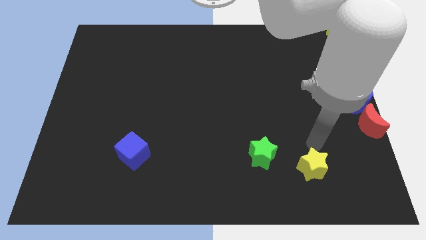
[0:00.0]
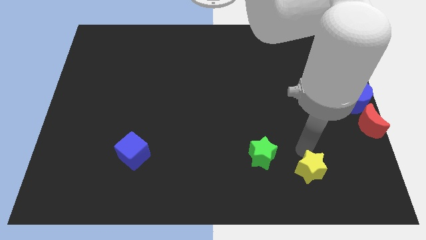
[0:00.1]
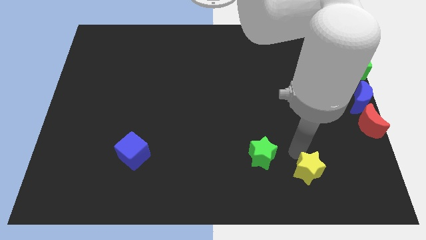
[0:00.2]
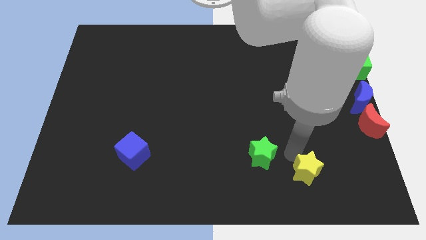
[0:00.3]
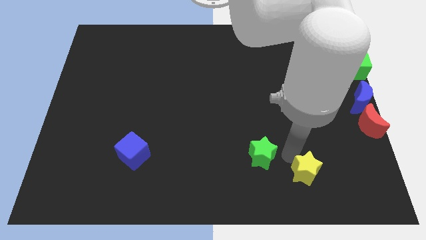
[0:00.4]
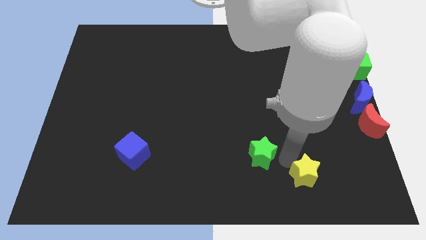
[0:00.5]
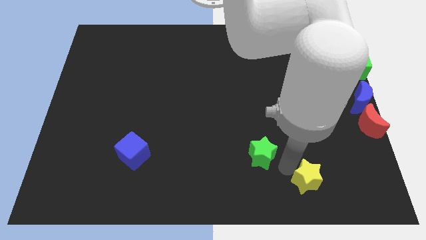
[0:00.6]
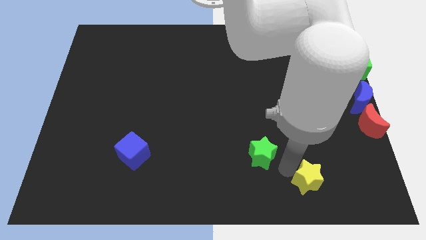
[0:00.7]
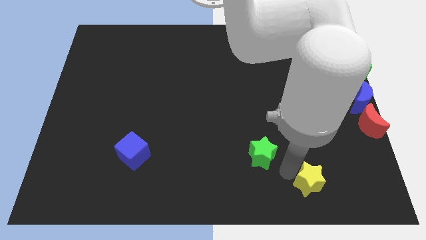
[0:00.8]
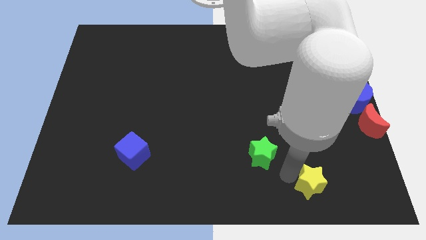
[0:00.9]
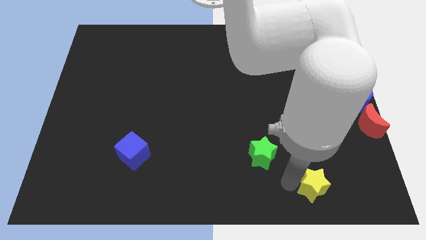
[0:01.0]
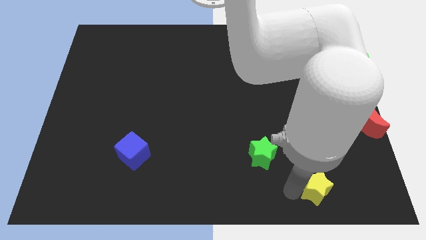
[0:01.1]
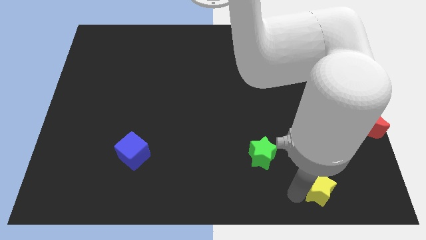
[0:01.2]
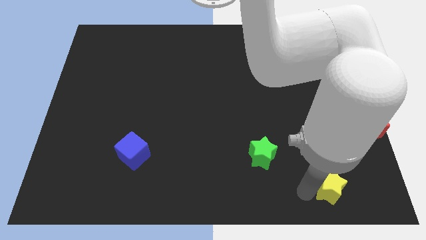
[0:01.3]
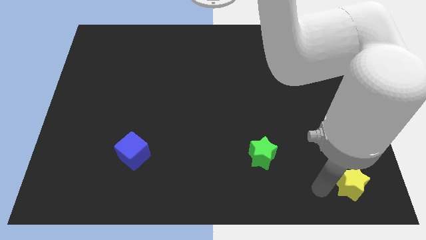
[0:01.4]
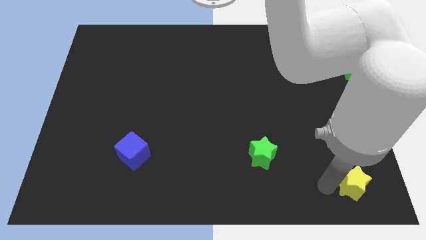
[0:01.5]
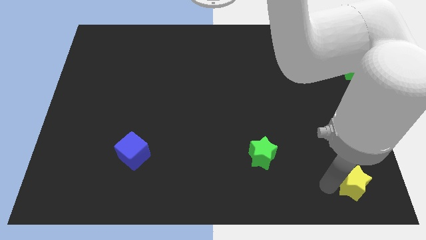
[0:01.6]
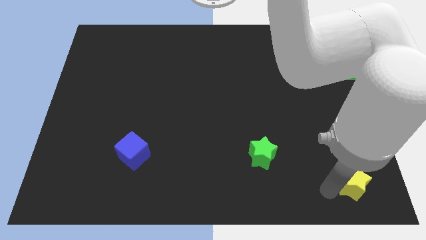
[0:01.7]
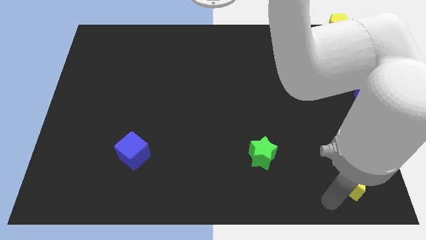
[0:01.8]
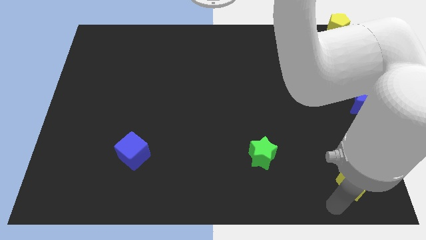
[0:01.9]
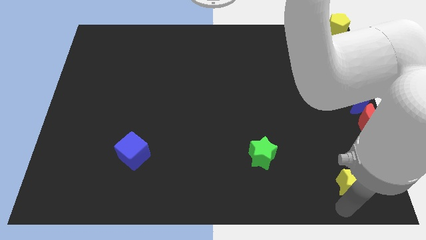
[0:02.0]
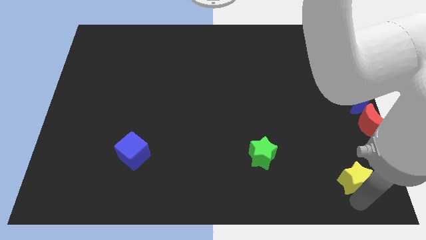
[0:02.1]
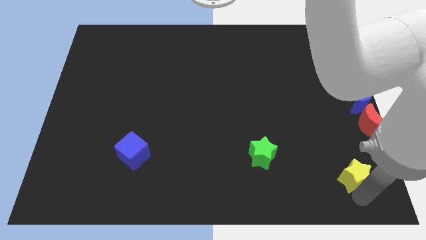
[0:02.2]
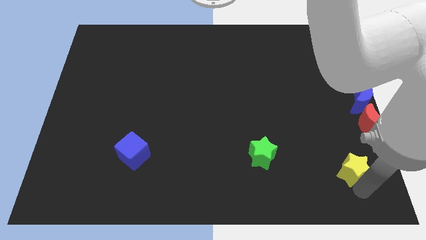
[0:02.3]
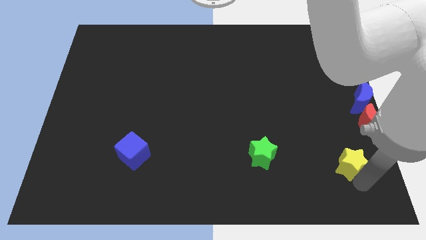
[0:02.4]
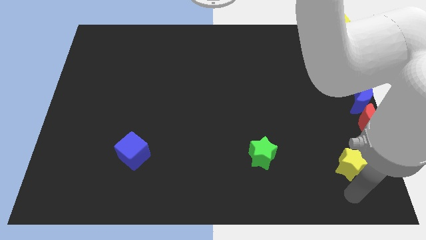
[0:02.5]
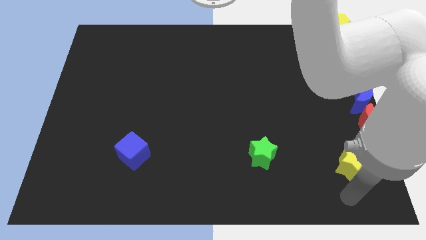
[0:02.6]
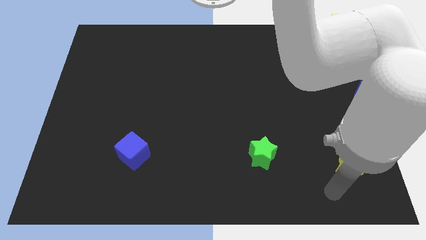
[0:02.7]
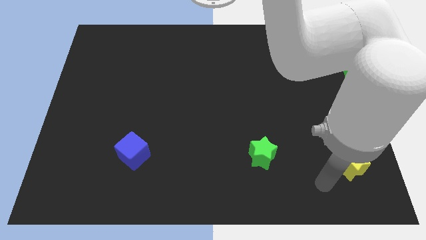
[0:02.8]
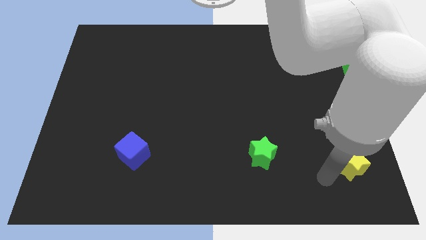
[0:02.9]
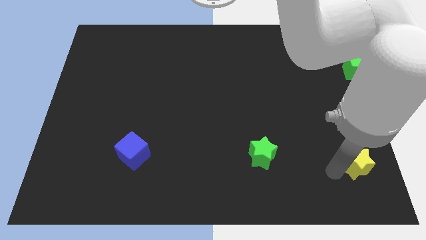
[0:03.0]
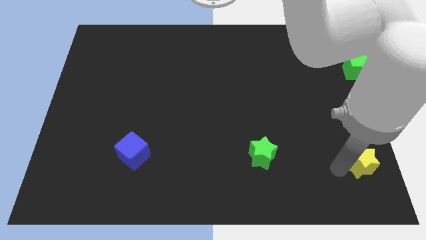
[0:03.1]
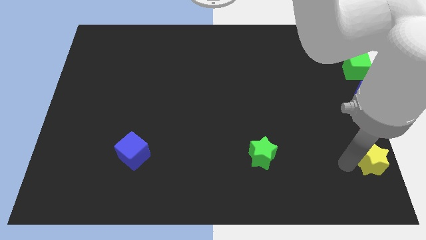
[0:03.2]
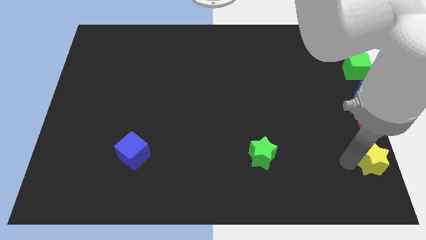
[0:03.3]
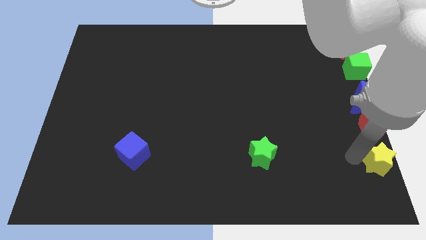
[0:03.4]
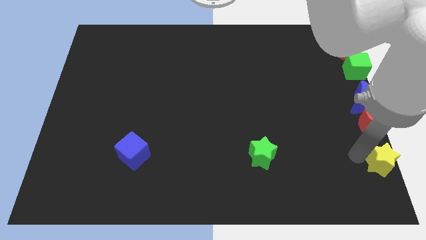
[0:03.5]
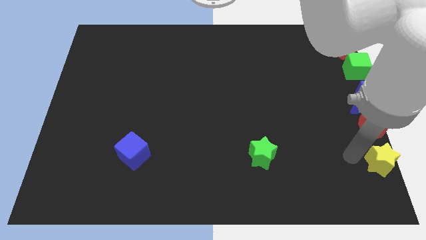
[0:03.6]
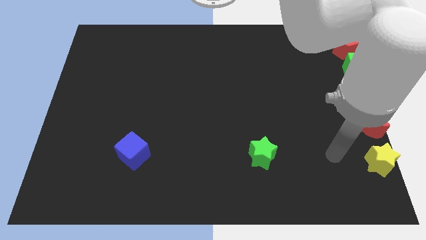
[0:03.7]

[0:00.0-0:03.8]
place the yellow star to the bottom of red crescent

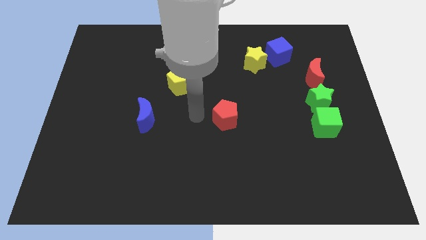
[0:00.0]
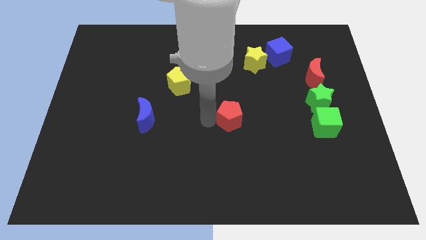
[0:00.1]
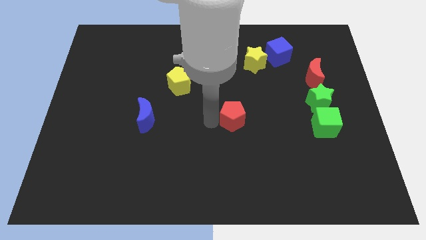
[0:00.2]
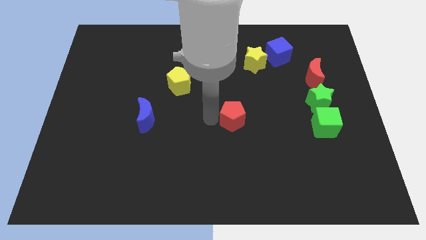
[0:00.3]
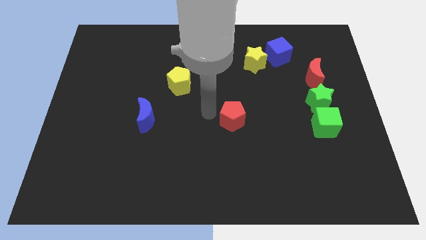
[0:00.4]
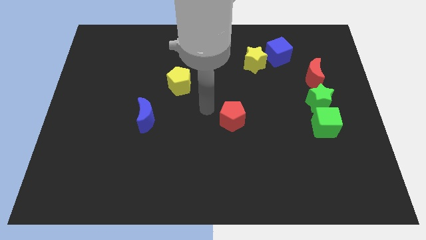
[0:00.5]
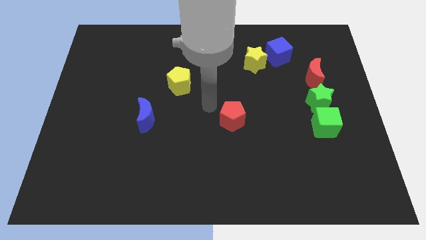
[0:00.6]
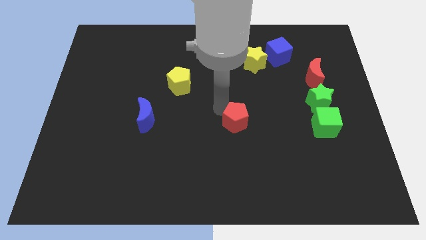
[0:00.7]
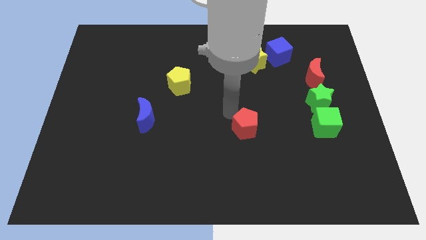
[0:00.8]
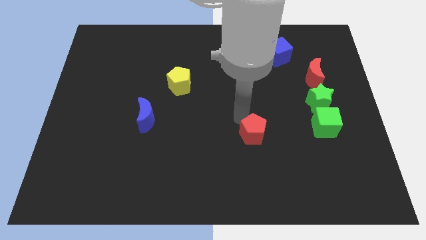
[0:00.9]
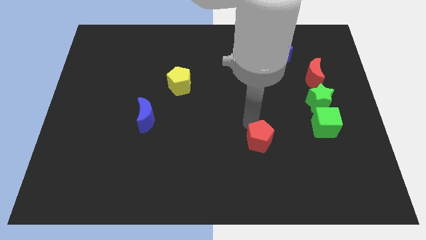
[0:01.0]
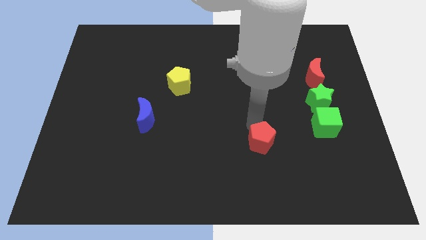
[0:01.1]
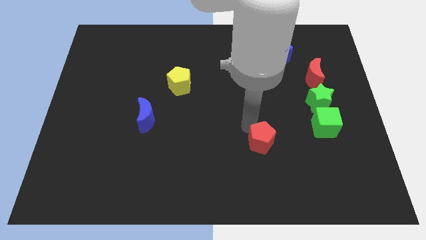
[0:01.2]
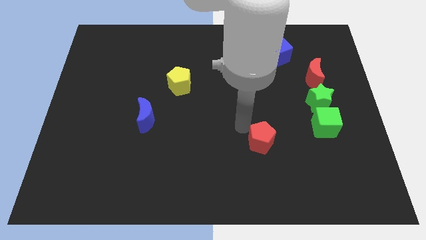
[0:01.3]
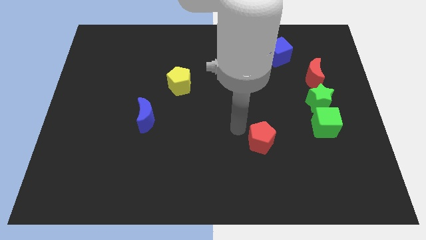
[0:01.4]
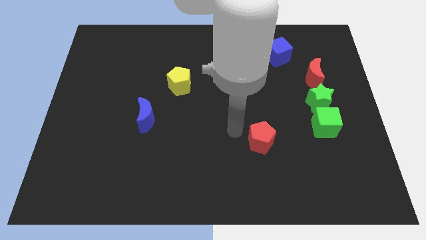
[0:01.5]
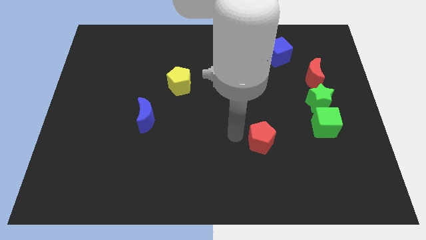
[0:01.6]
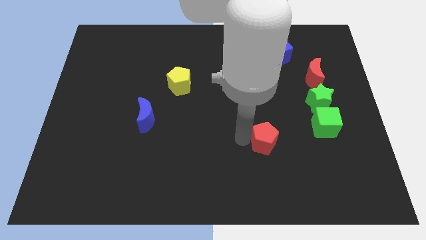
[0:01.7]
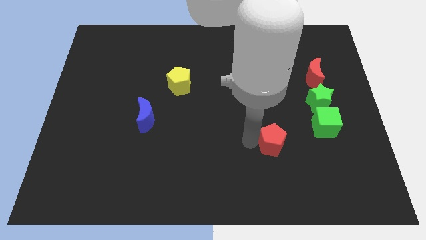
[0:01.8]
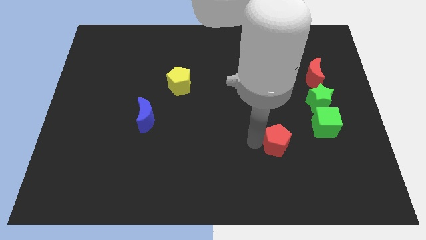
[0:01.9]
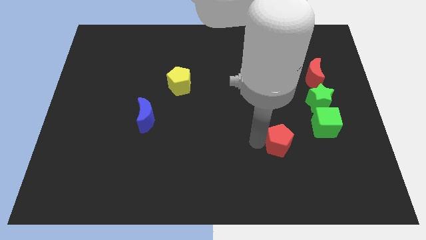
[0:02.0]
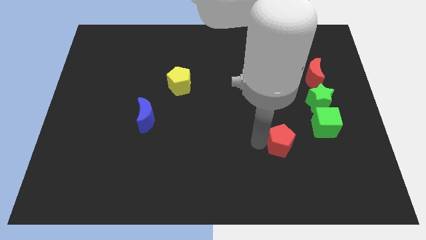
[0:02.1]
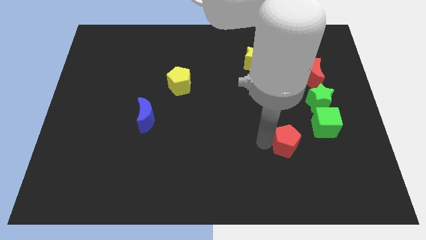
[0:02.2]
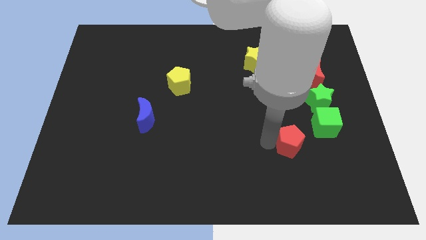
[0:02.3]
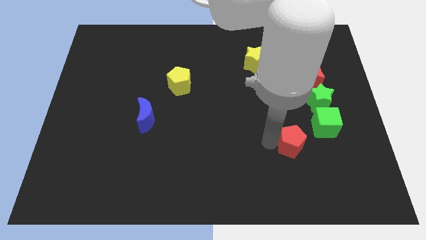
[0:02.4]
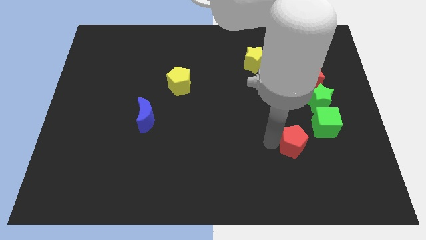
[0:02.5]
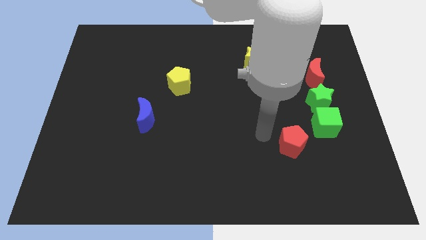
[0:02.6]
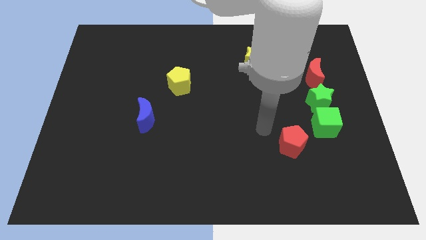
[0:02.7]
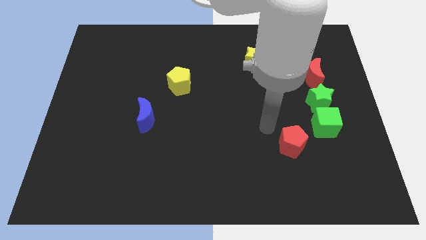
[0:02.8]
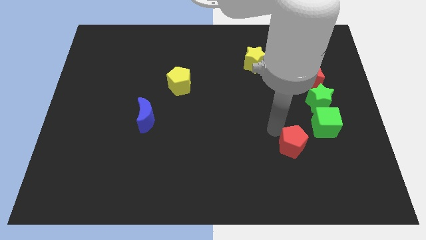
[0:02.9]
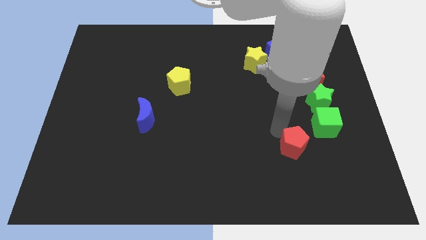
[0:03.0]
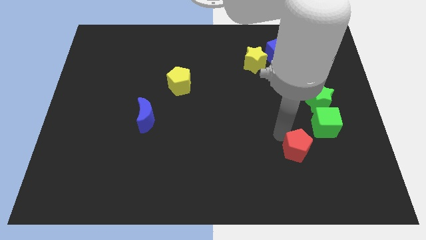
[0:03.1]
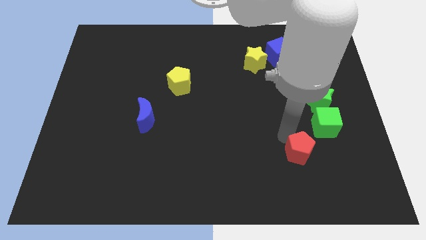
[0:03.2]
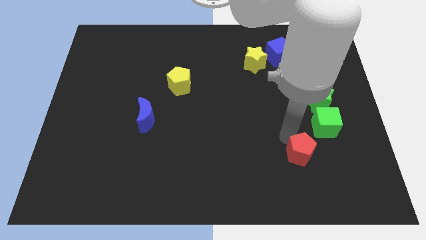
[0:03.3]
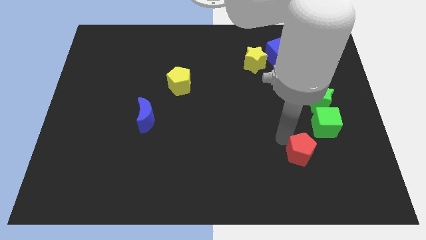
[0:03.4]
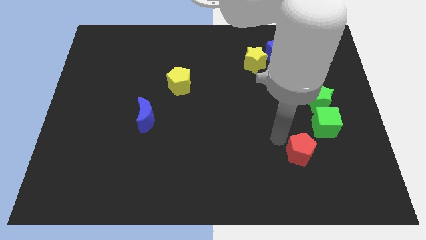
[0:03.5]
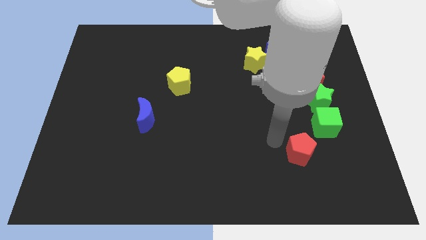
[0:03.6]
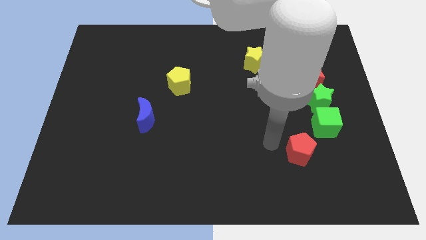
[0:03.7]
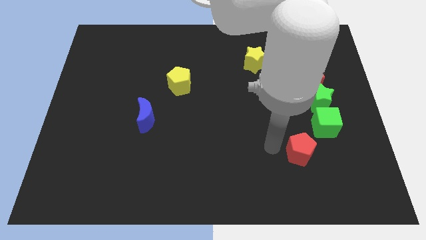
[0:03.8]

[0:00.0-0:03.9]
put the red pentagon at the bottom left side of green cube

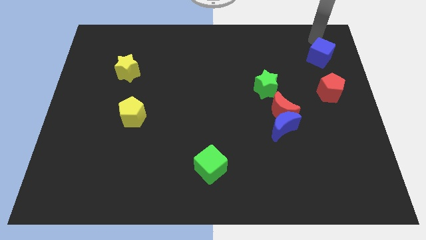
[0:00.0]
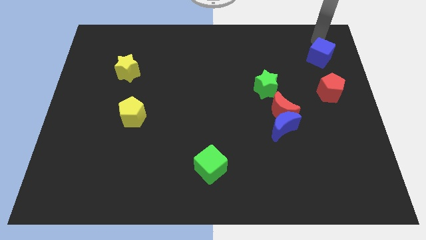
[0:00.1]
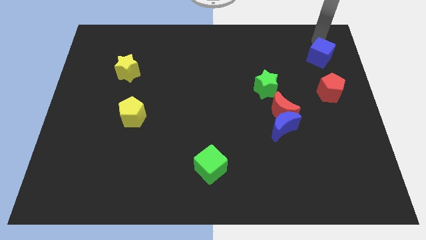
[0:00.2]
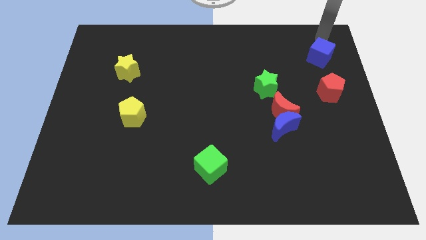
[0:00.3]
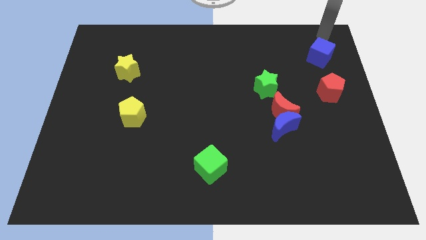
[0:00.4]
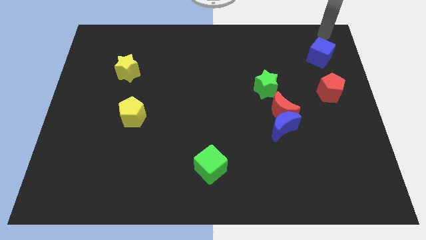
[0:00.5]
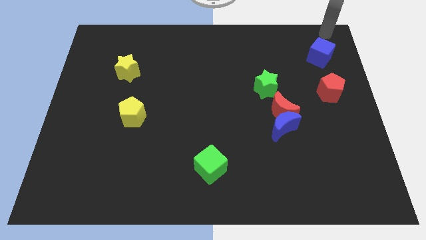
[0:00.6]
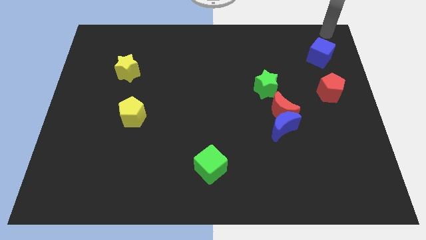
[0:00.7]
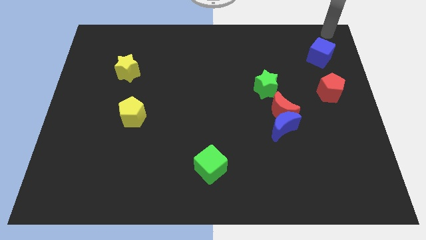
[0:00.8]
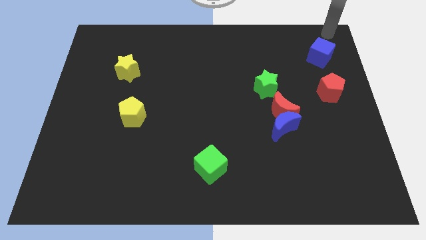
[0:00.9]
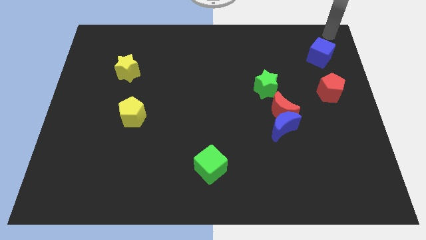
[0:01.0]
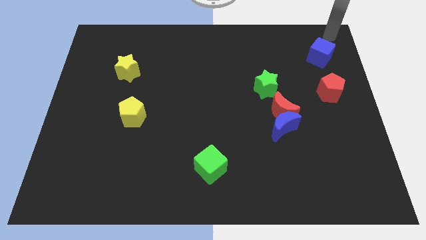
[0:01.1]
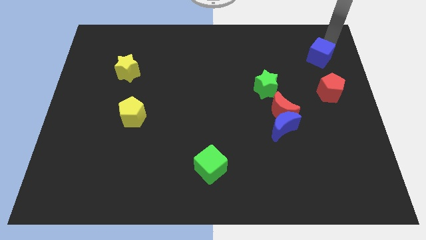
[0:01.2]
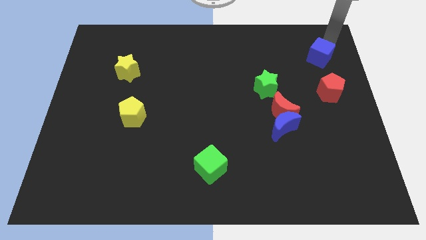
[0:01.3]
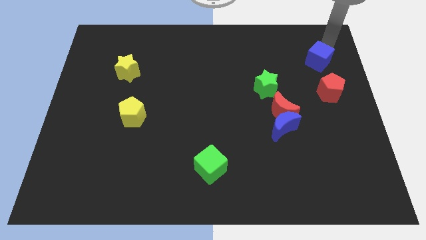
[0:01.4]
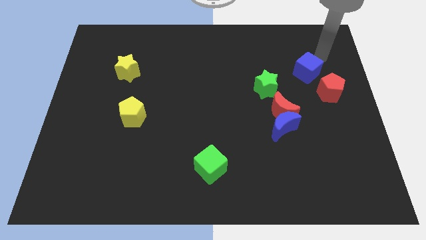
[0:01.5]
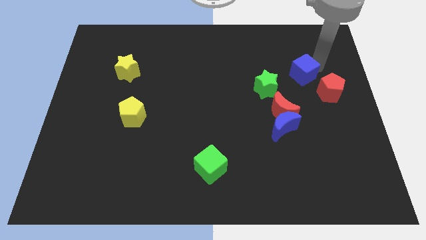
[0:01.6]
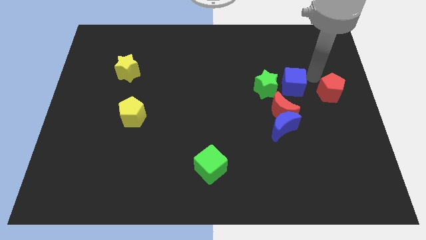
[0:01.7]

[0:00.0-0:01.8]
put the blue cube right to the green star
